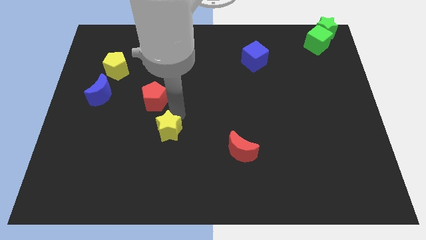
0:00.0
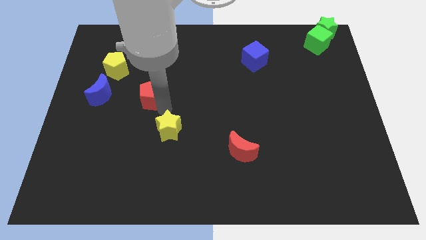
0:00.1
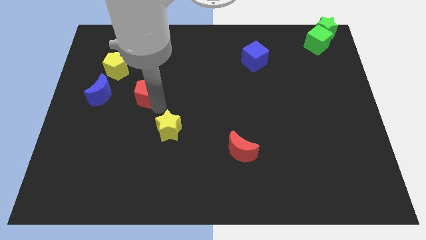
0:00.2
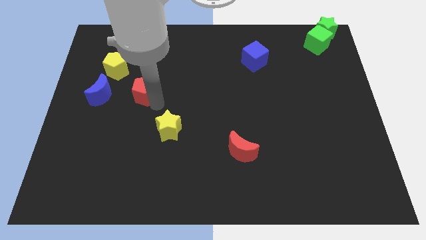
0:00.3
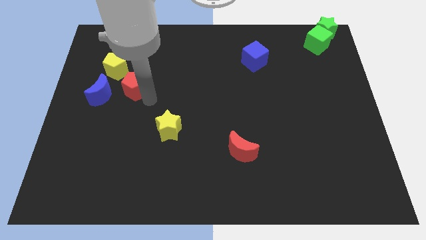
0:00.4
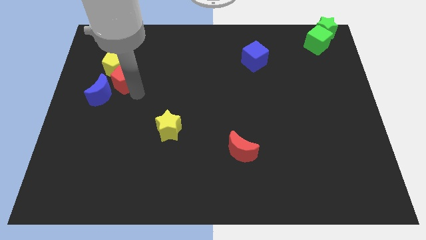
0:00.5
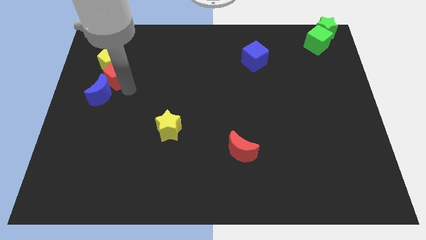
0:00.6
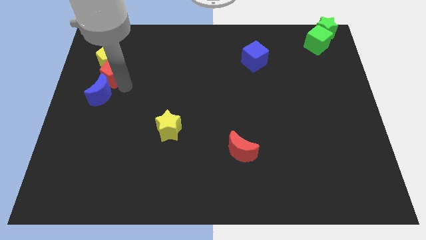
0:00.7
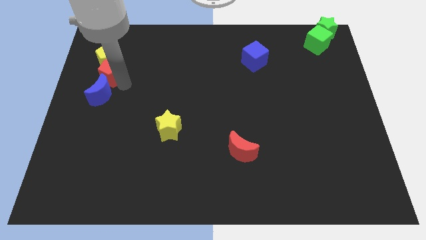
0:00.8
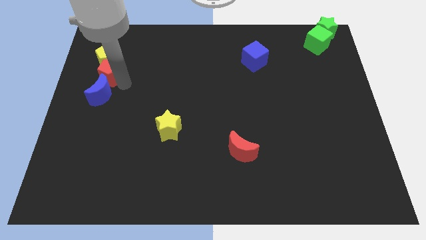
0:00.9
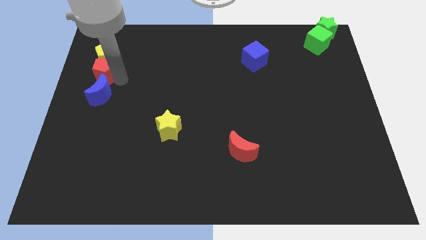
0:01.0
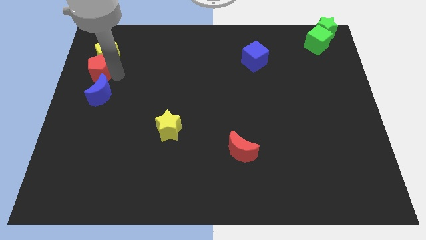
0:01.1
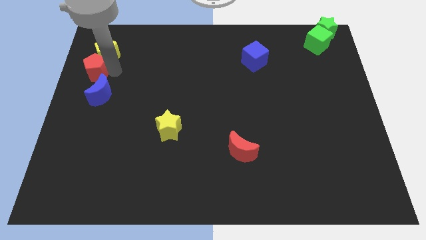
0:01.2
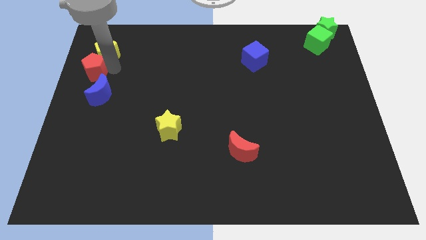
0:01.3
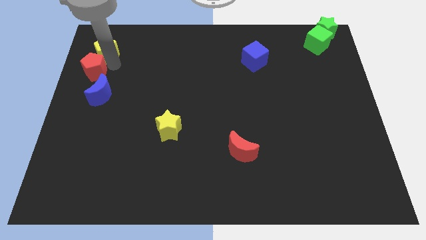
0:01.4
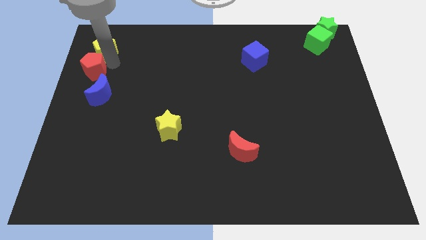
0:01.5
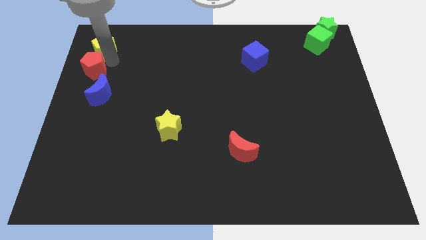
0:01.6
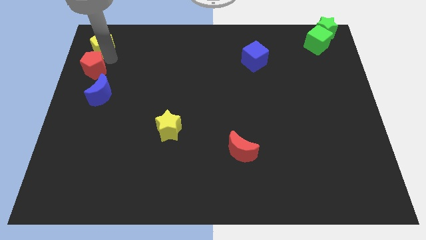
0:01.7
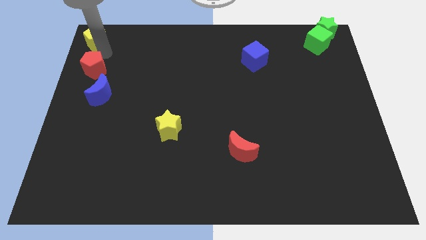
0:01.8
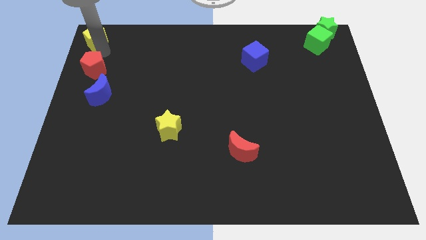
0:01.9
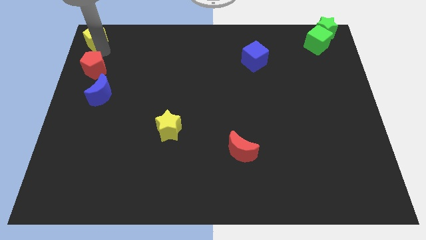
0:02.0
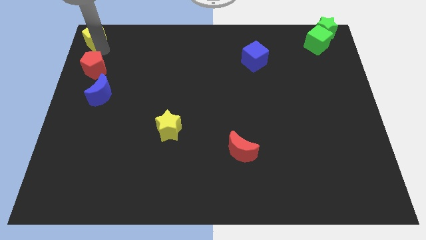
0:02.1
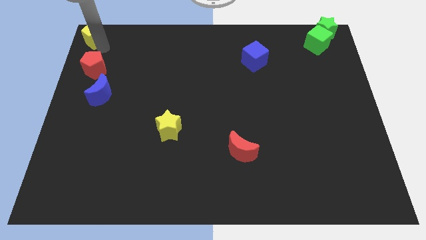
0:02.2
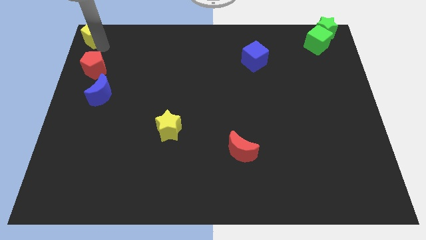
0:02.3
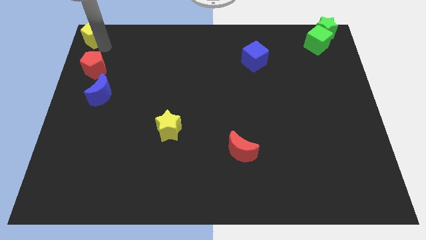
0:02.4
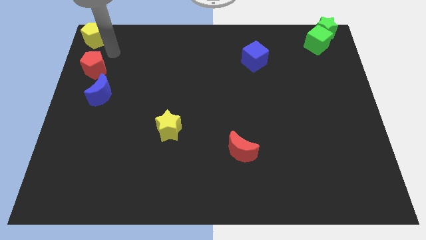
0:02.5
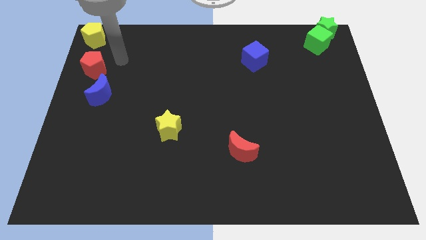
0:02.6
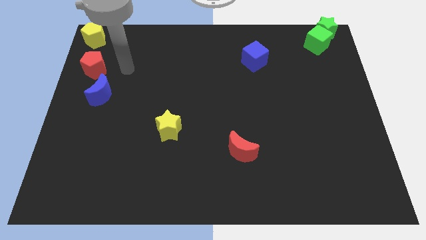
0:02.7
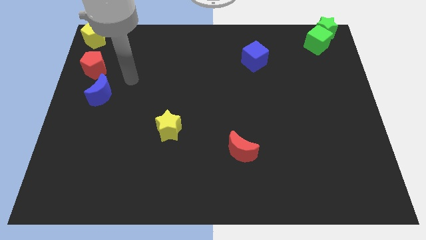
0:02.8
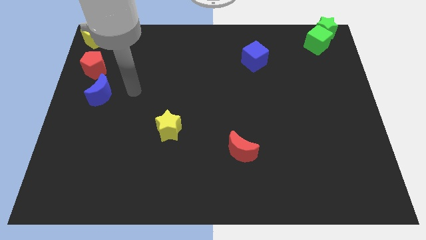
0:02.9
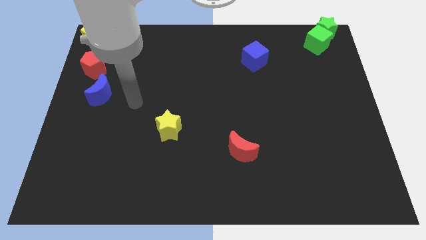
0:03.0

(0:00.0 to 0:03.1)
make a diagoal line of blocks at the top left side of the table

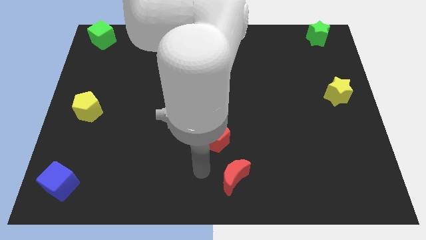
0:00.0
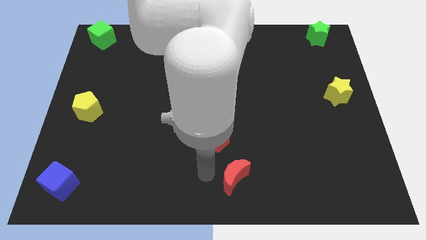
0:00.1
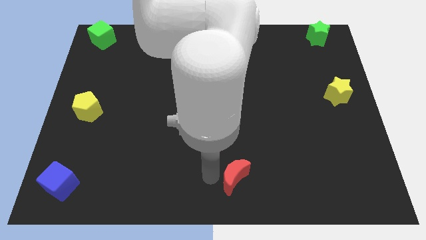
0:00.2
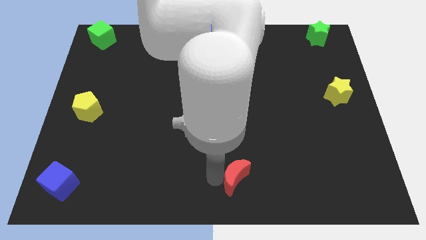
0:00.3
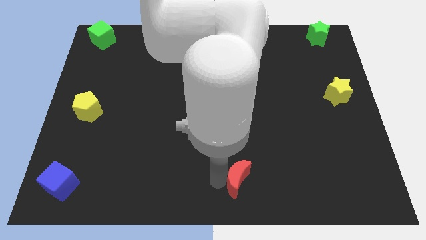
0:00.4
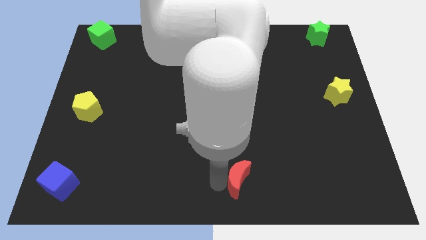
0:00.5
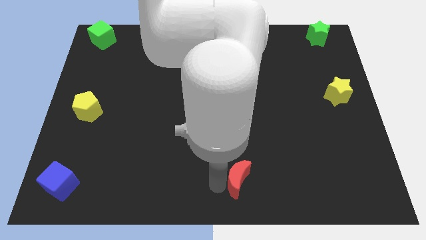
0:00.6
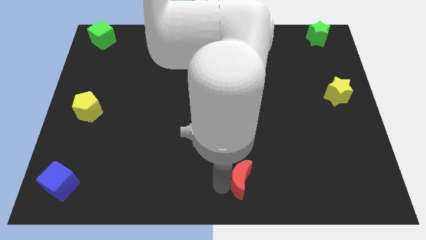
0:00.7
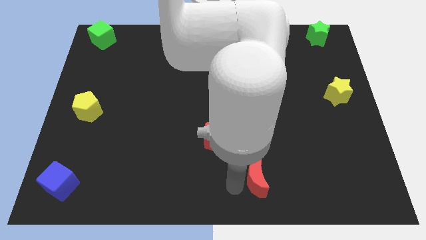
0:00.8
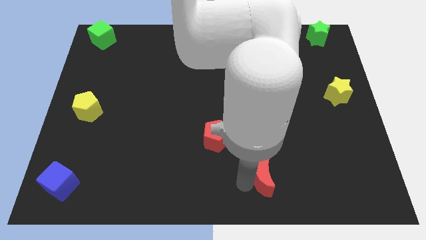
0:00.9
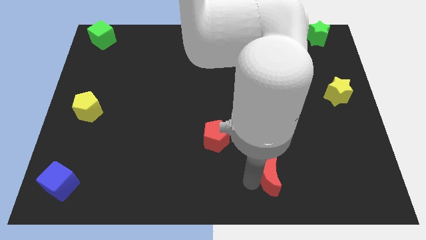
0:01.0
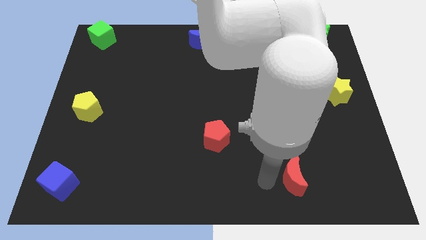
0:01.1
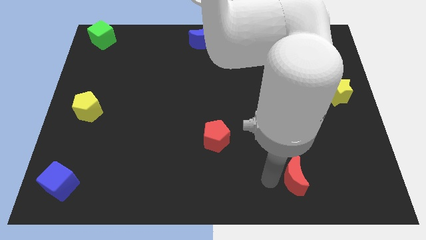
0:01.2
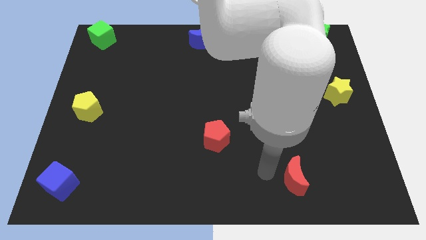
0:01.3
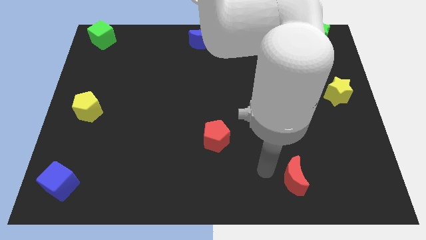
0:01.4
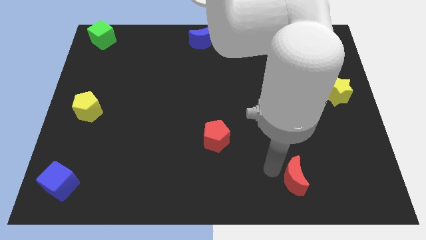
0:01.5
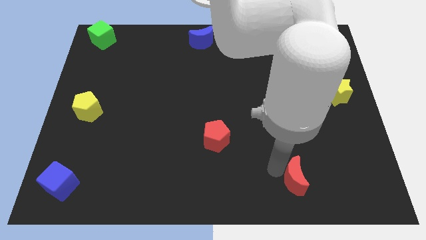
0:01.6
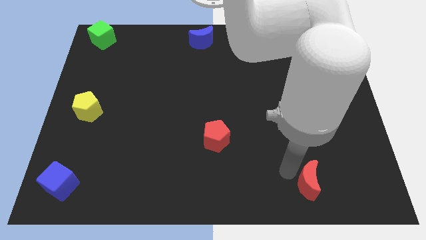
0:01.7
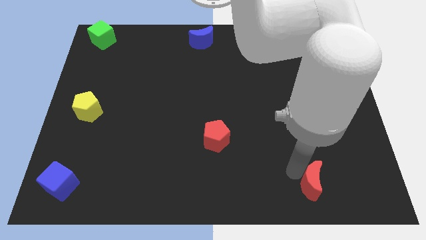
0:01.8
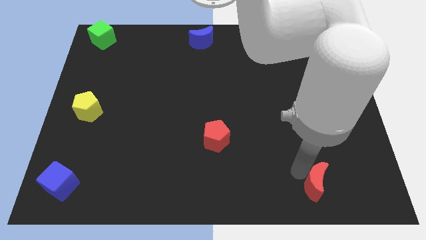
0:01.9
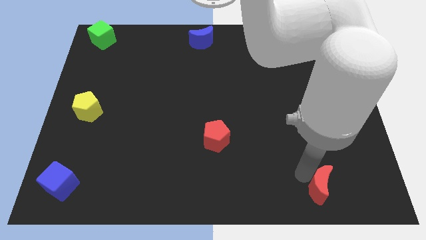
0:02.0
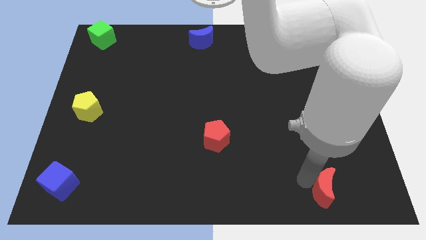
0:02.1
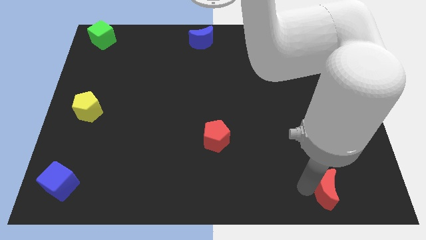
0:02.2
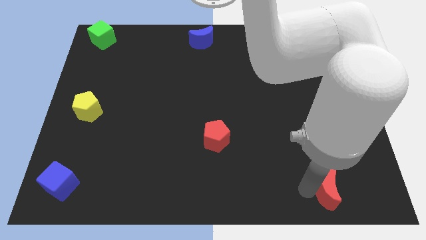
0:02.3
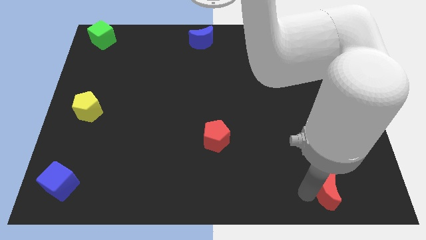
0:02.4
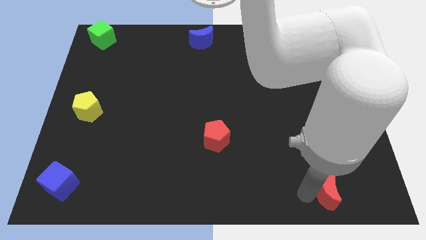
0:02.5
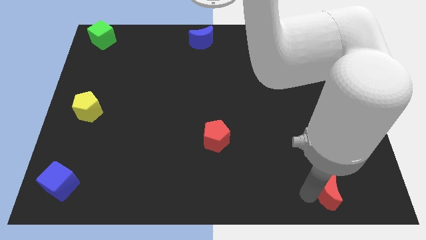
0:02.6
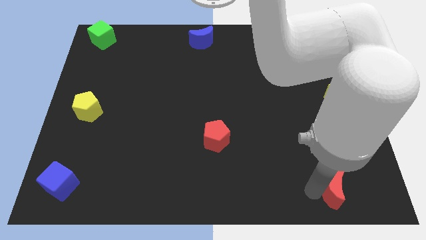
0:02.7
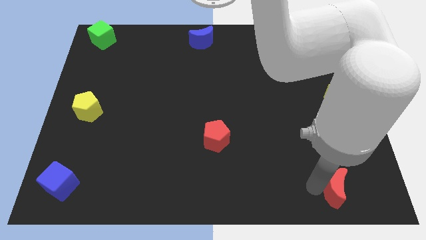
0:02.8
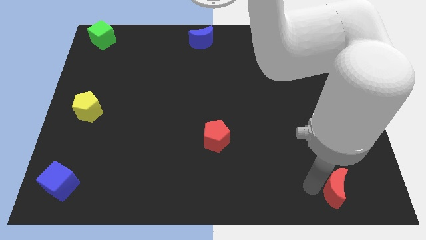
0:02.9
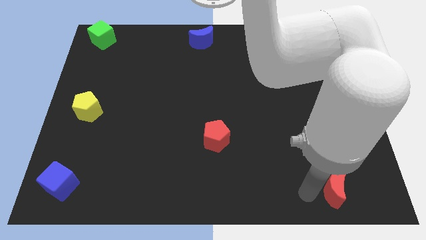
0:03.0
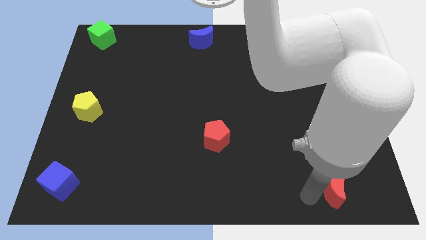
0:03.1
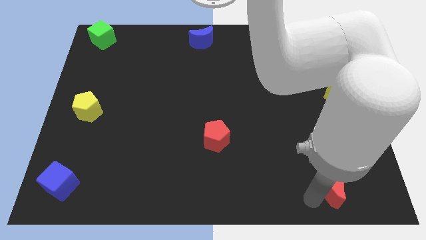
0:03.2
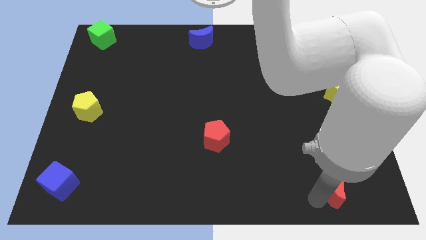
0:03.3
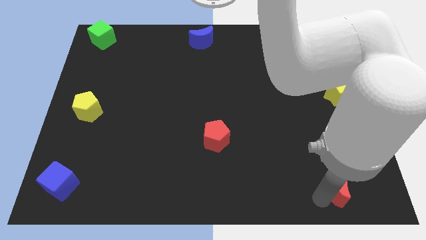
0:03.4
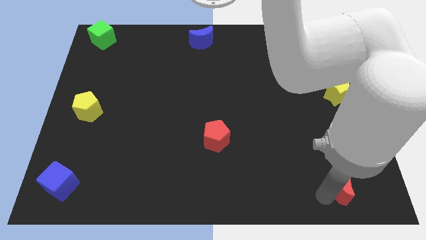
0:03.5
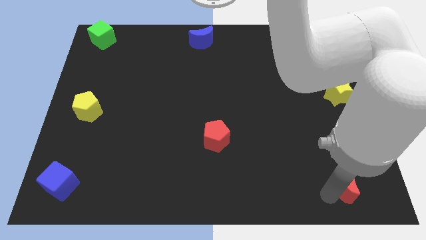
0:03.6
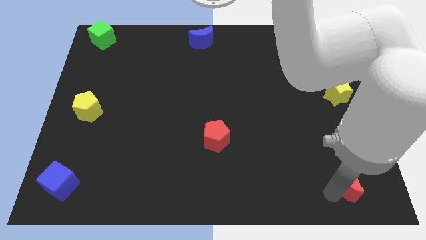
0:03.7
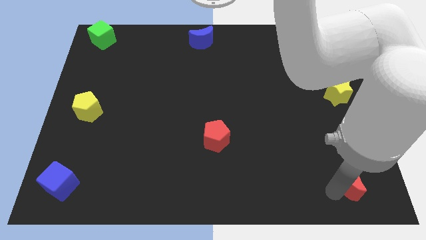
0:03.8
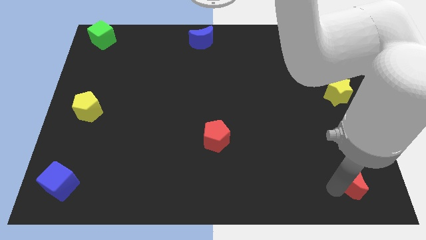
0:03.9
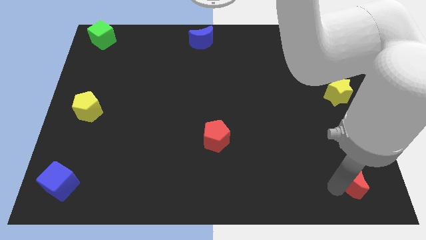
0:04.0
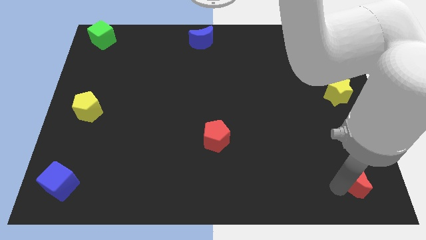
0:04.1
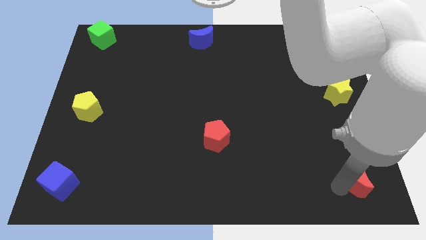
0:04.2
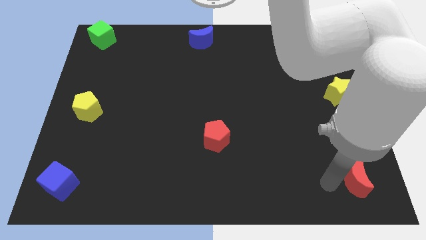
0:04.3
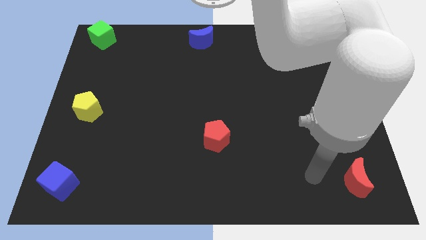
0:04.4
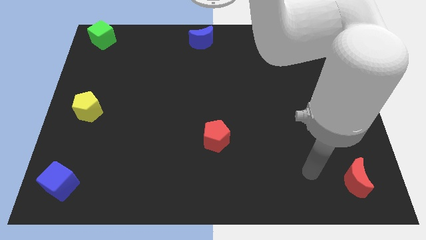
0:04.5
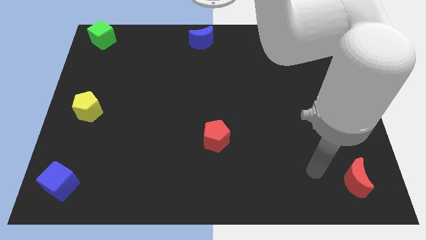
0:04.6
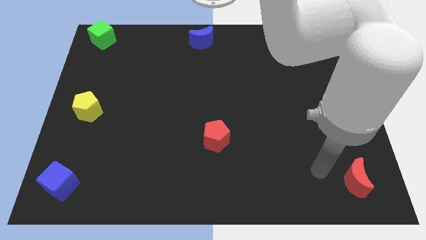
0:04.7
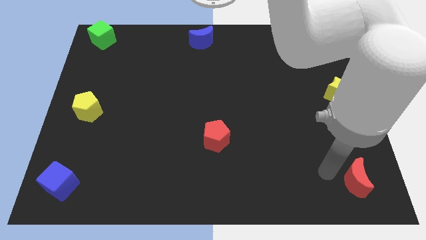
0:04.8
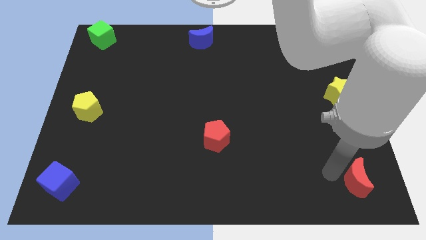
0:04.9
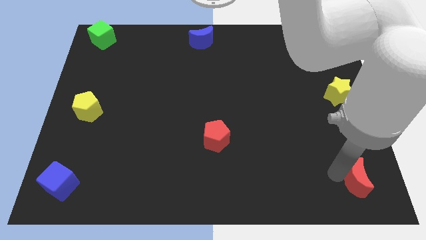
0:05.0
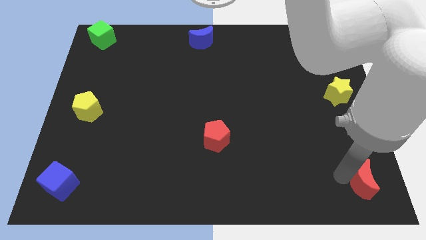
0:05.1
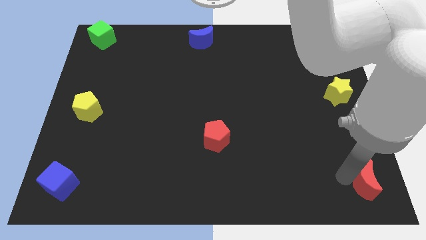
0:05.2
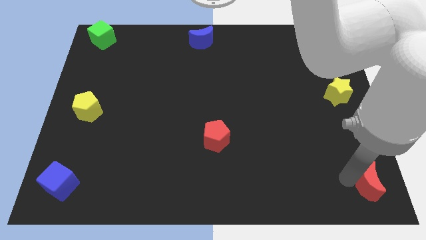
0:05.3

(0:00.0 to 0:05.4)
move the red moon towards the right side

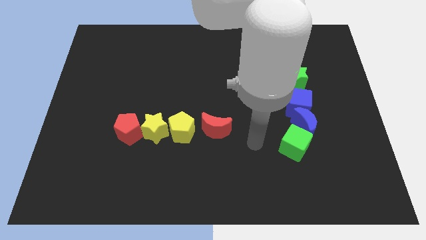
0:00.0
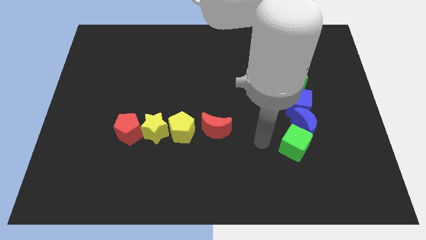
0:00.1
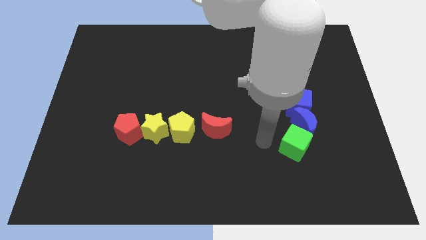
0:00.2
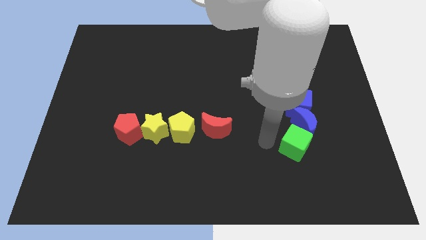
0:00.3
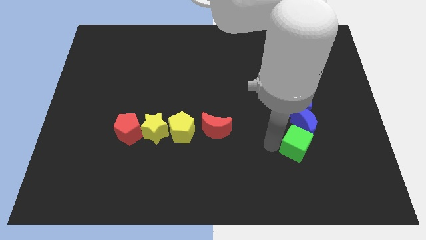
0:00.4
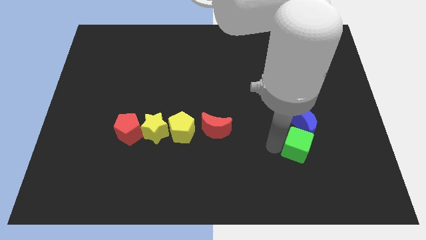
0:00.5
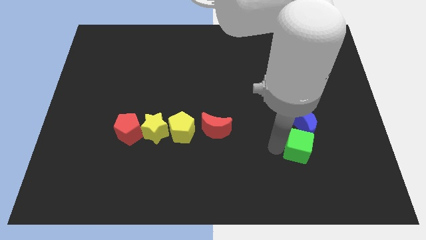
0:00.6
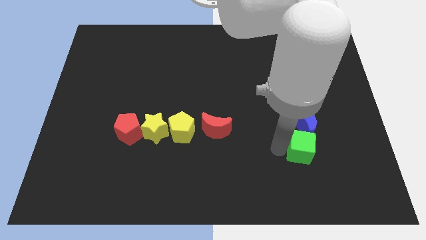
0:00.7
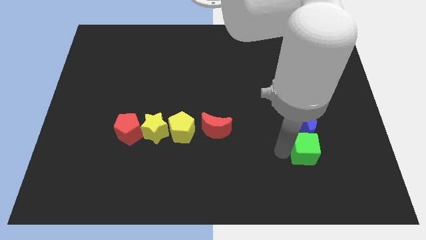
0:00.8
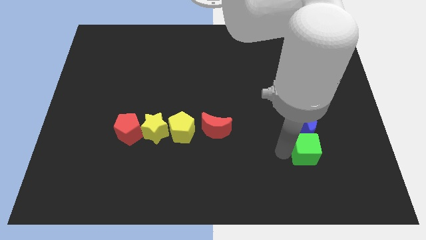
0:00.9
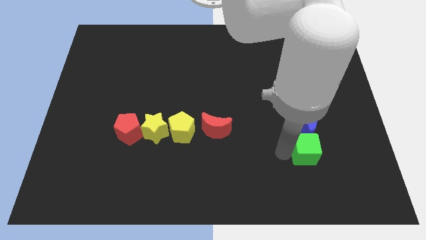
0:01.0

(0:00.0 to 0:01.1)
slide green cube slightly to the right
